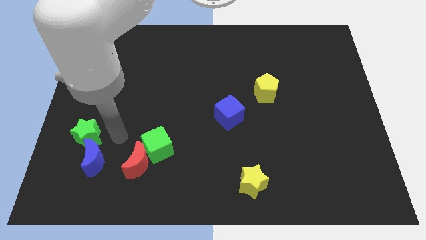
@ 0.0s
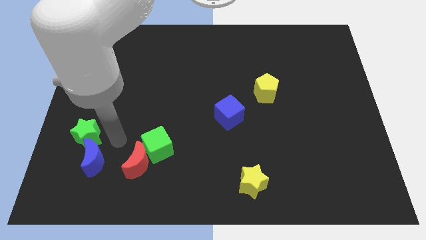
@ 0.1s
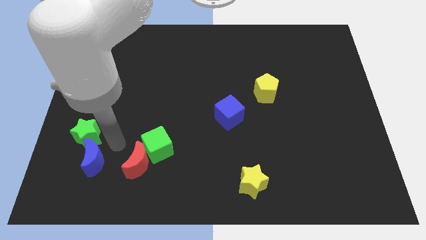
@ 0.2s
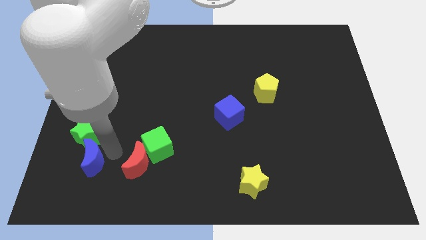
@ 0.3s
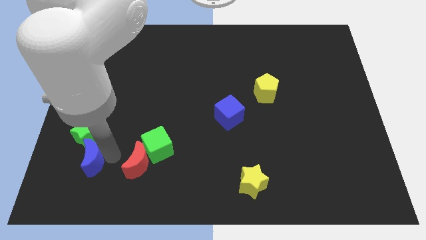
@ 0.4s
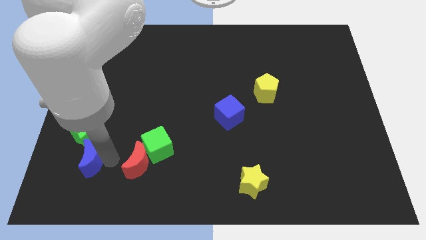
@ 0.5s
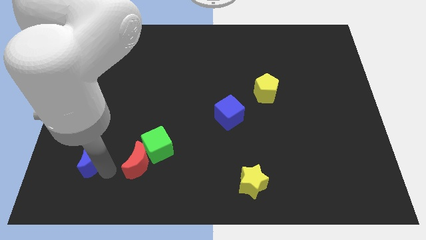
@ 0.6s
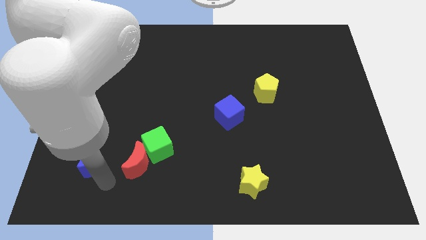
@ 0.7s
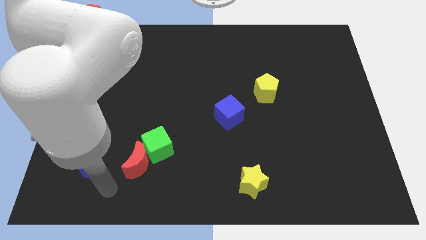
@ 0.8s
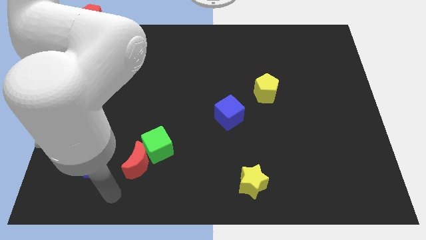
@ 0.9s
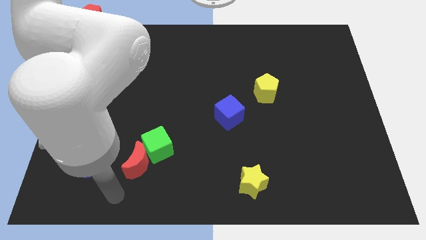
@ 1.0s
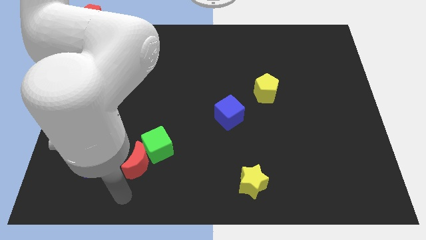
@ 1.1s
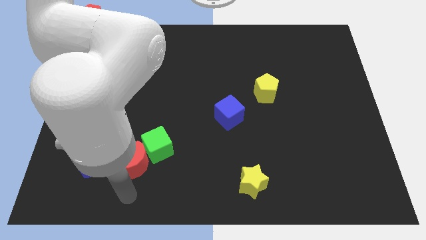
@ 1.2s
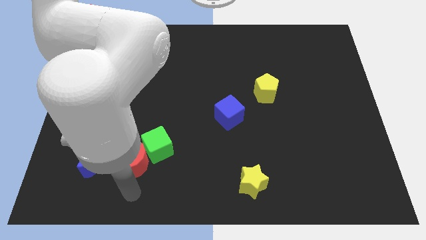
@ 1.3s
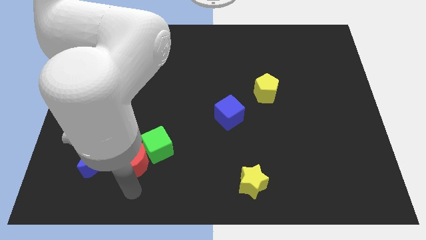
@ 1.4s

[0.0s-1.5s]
put your arm vertically below the red moon

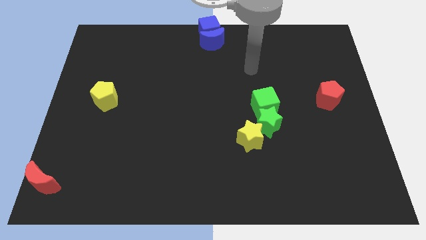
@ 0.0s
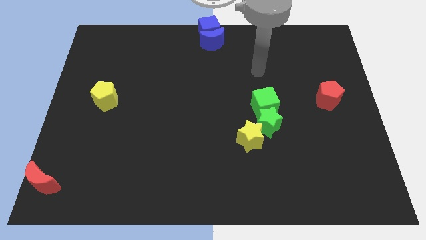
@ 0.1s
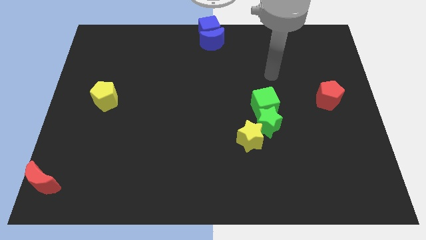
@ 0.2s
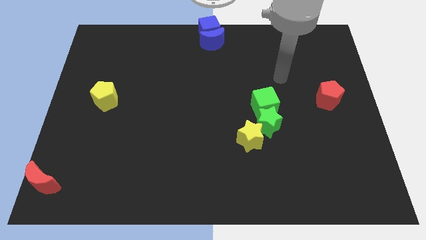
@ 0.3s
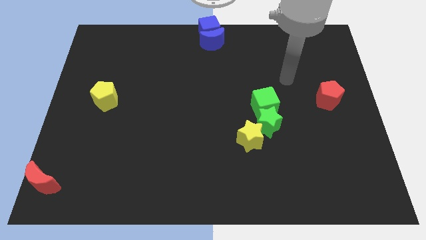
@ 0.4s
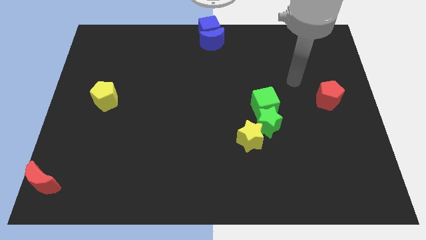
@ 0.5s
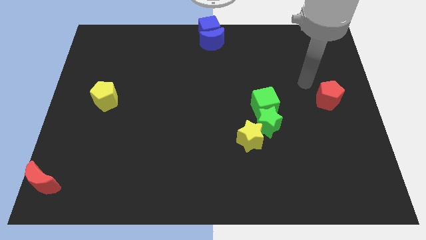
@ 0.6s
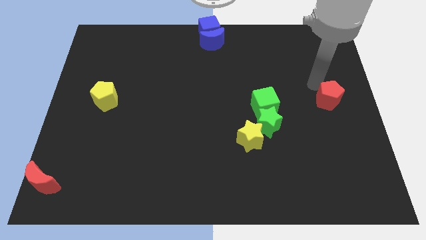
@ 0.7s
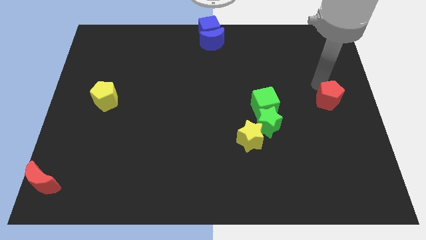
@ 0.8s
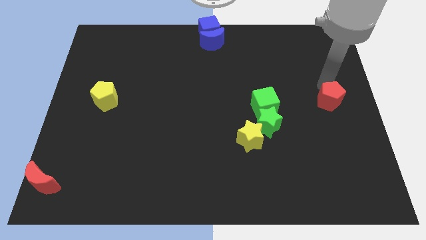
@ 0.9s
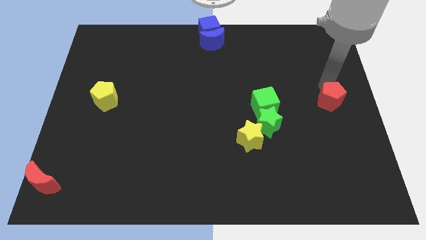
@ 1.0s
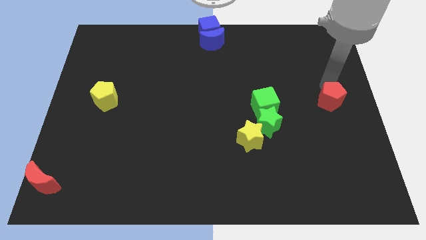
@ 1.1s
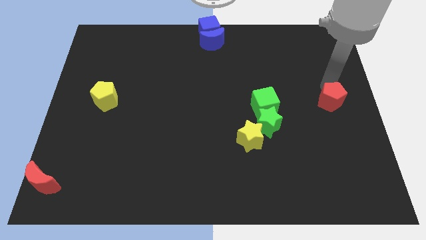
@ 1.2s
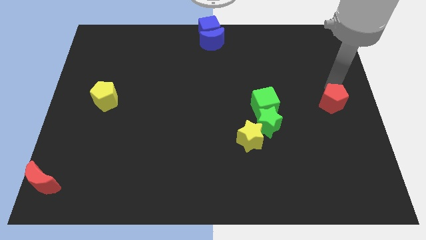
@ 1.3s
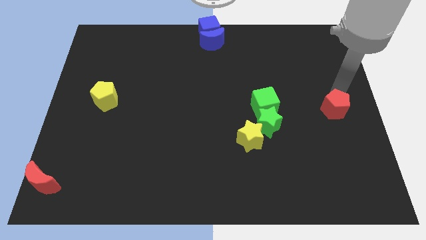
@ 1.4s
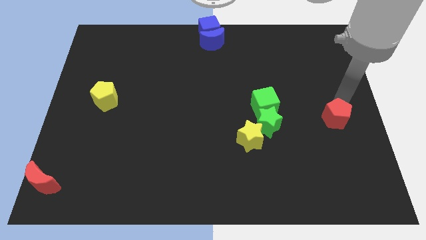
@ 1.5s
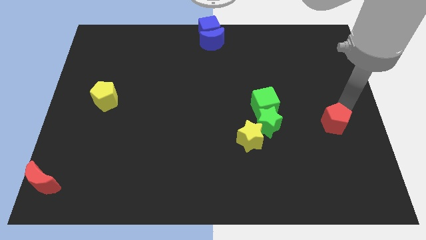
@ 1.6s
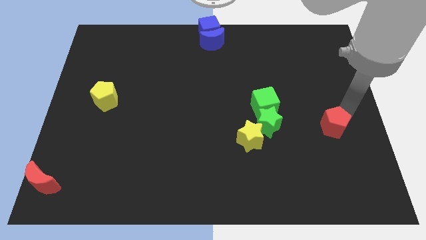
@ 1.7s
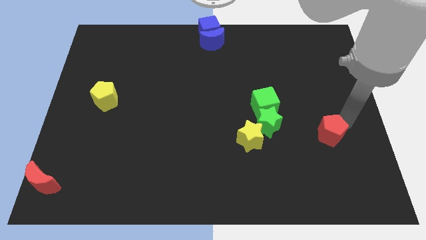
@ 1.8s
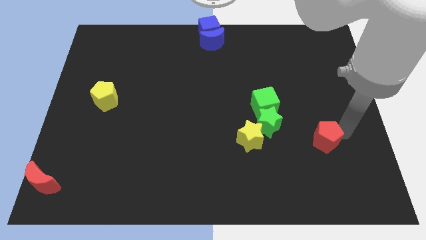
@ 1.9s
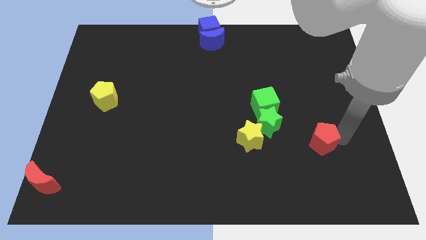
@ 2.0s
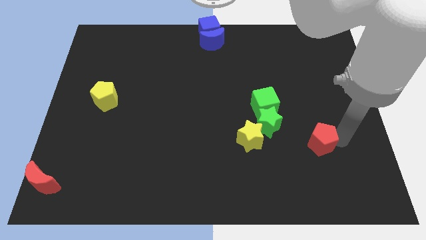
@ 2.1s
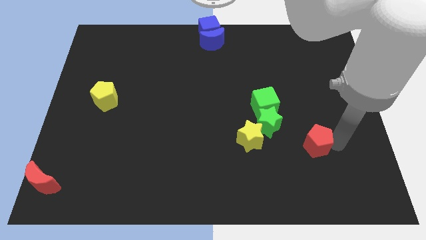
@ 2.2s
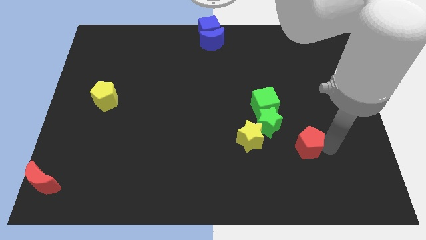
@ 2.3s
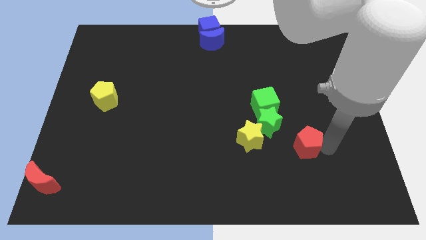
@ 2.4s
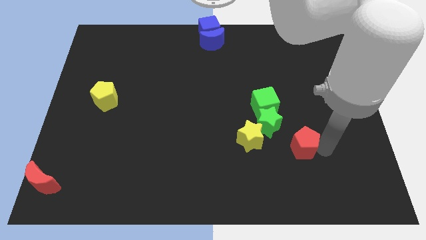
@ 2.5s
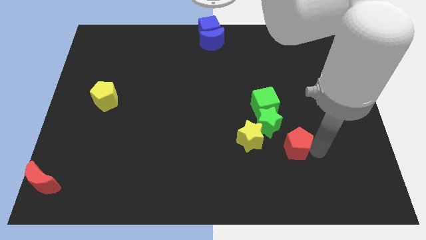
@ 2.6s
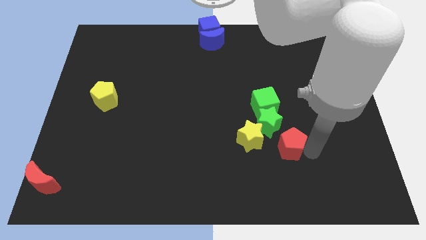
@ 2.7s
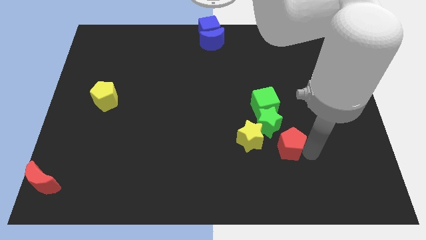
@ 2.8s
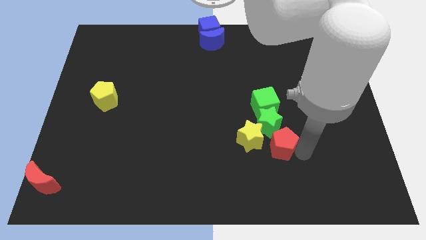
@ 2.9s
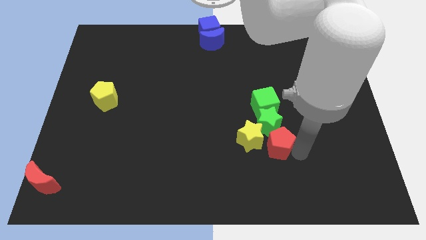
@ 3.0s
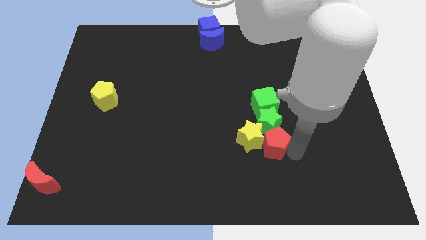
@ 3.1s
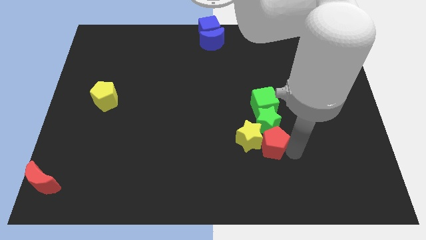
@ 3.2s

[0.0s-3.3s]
place the red pentagon into the green and yellow stars

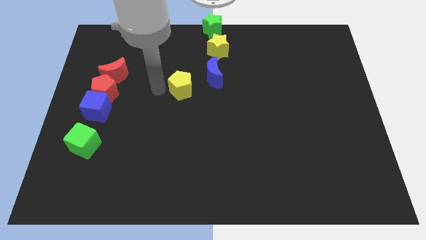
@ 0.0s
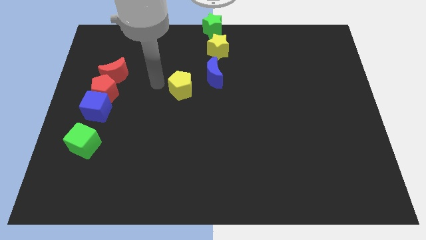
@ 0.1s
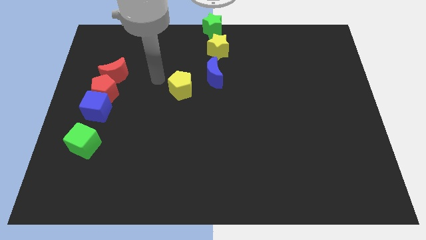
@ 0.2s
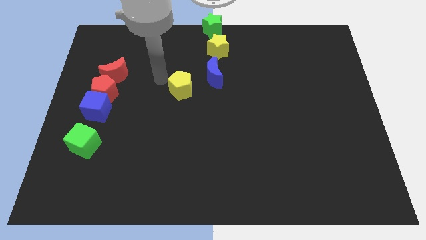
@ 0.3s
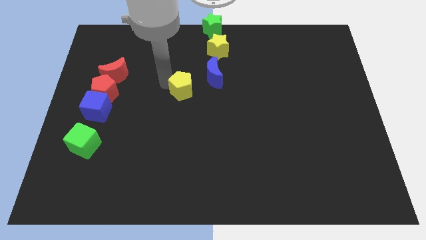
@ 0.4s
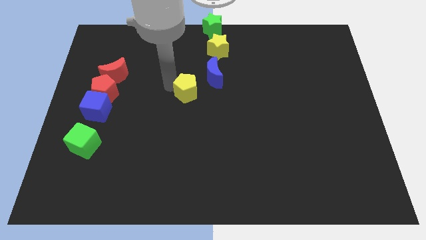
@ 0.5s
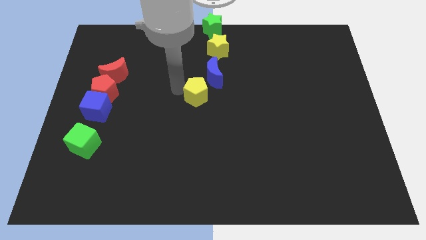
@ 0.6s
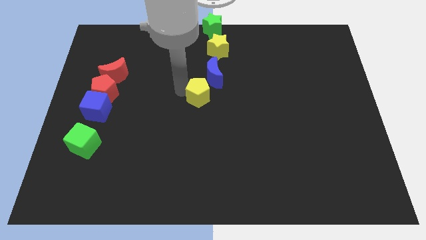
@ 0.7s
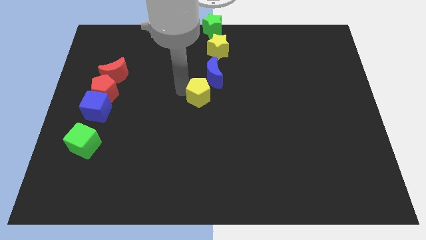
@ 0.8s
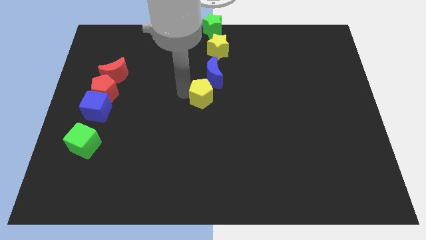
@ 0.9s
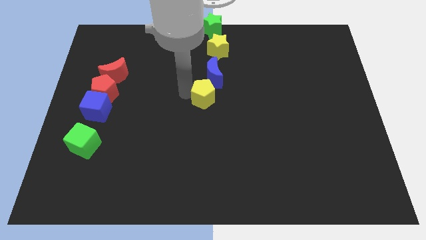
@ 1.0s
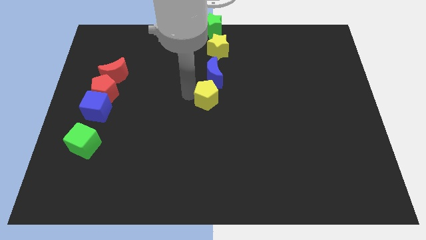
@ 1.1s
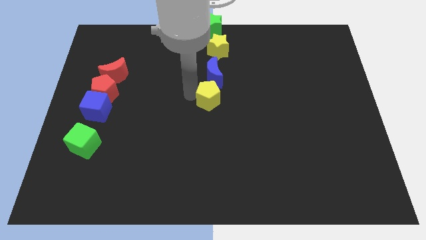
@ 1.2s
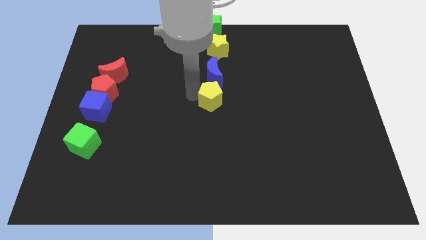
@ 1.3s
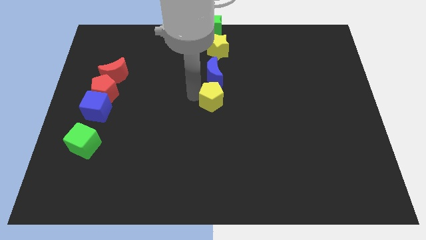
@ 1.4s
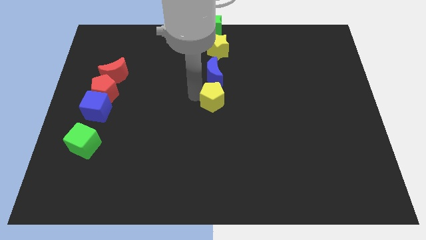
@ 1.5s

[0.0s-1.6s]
move the yellow pentagon to the center of the board

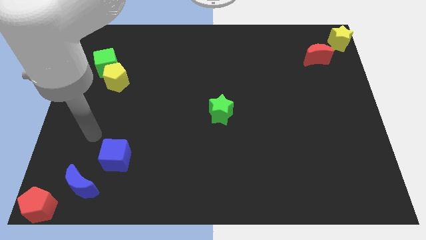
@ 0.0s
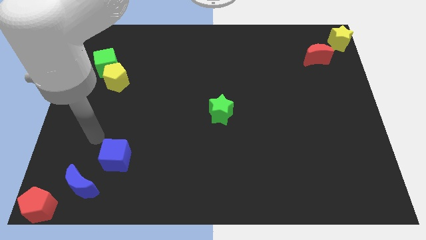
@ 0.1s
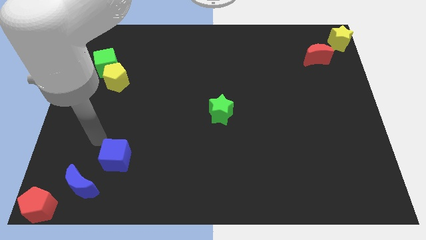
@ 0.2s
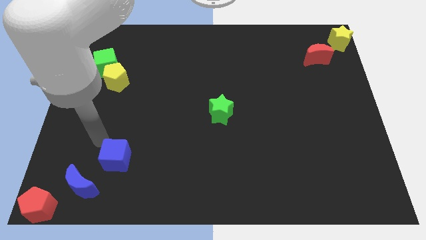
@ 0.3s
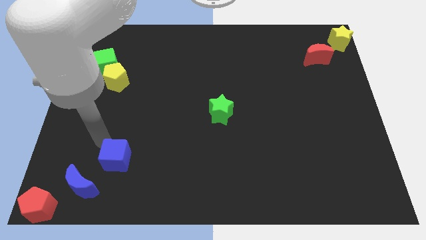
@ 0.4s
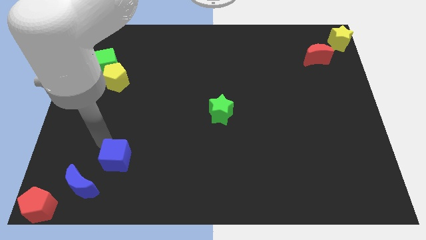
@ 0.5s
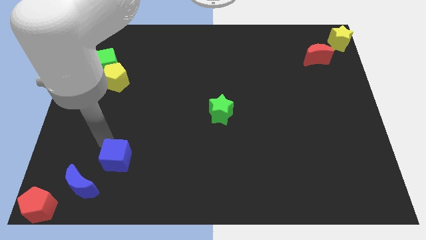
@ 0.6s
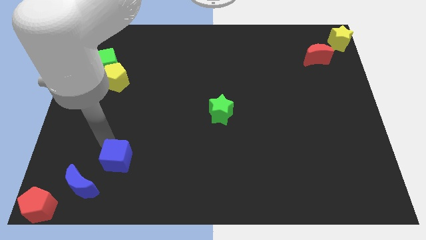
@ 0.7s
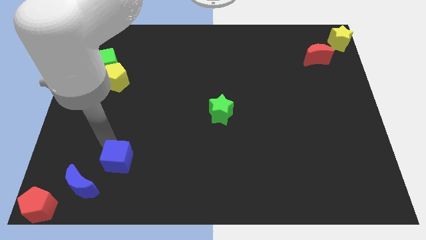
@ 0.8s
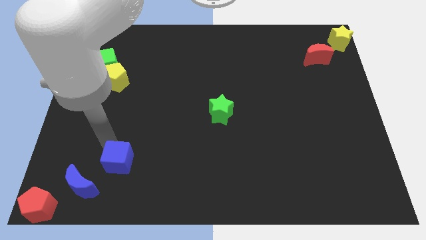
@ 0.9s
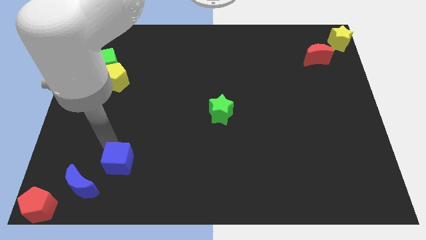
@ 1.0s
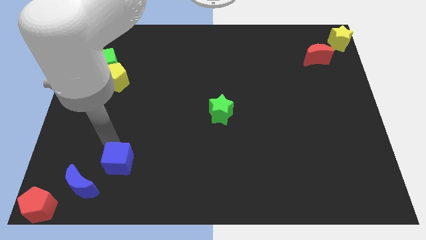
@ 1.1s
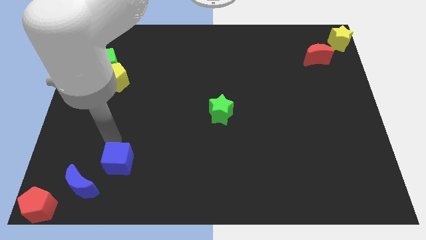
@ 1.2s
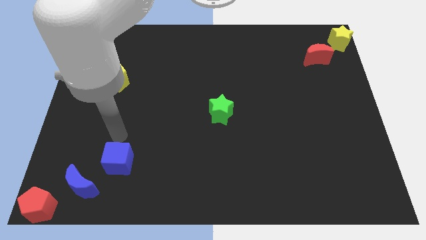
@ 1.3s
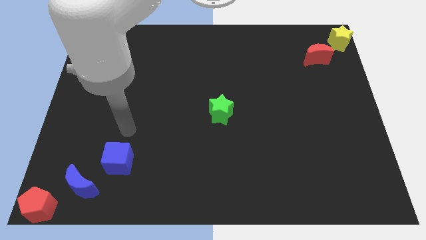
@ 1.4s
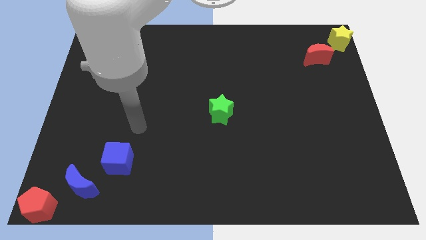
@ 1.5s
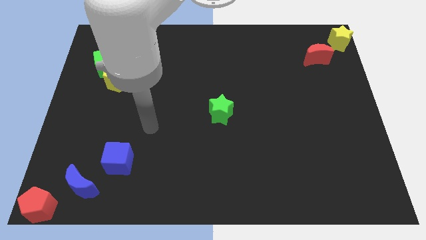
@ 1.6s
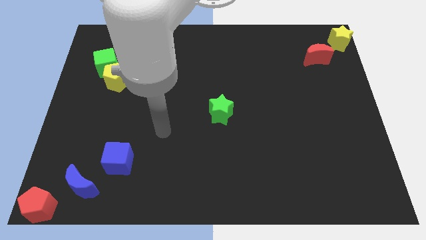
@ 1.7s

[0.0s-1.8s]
move the blue cube slightly to the bottom

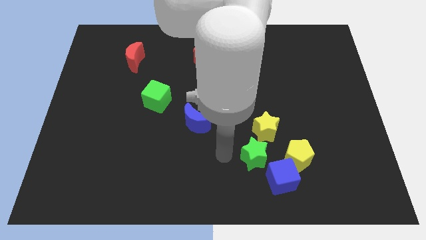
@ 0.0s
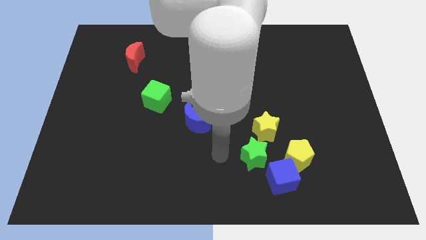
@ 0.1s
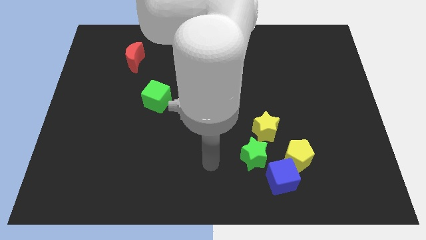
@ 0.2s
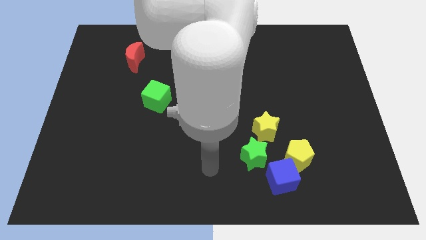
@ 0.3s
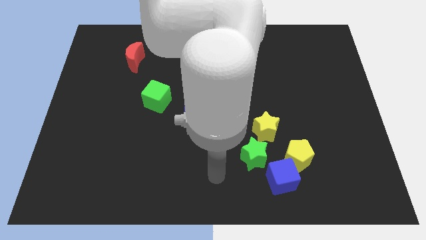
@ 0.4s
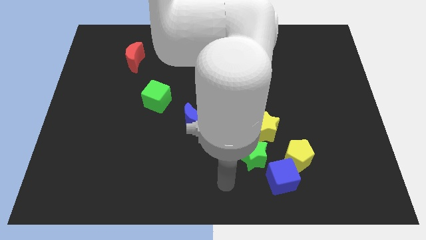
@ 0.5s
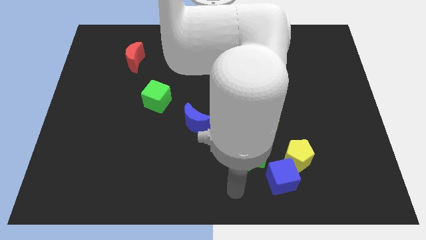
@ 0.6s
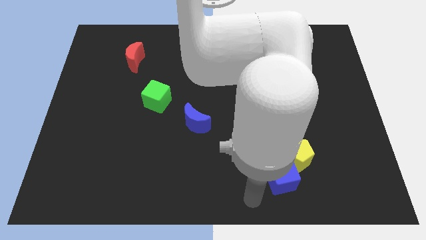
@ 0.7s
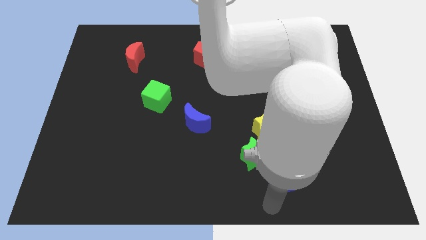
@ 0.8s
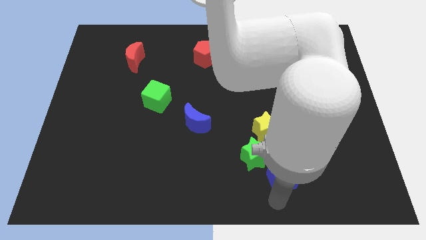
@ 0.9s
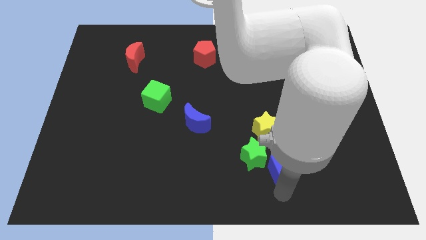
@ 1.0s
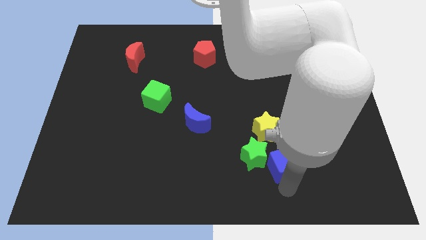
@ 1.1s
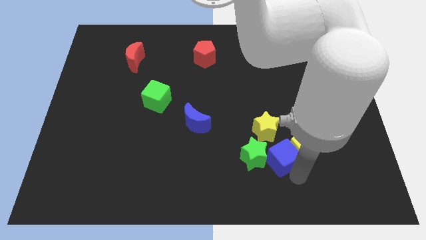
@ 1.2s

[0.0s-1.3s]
push the blue cube to the right of the green star
